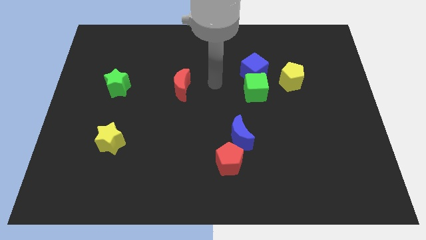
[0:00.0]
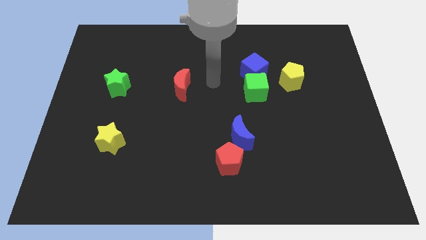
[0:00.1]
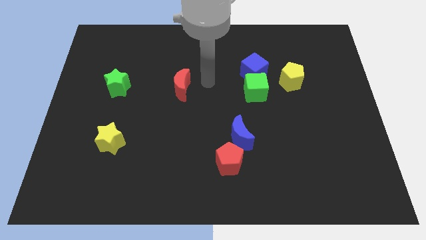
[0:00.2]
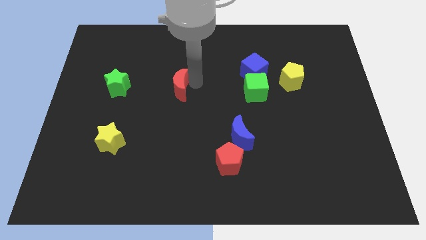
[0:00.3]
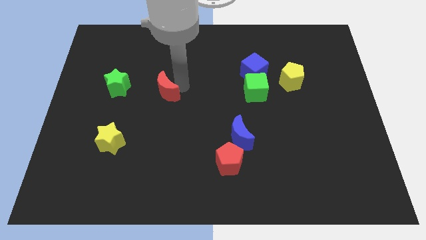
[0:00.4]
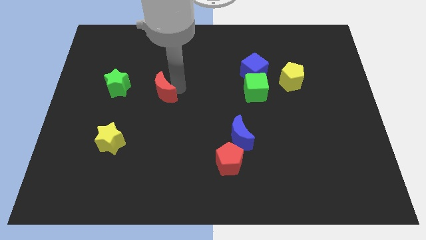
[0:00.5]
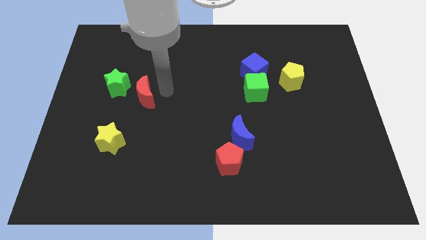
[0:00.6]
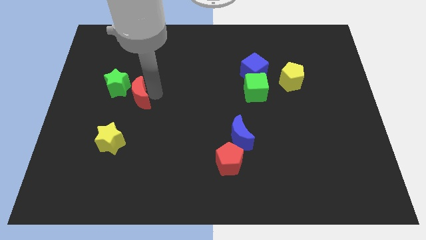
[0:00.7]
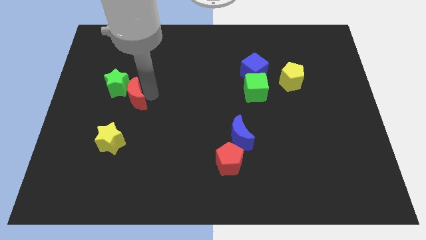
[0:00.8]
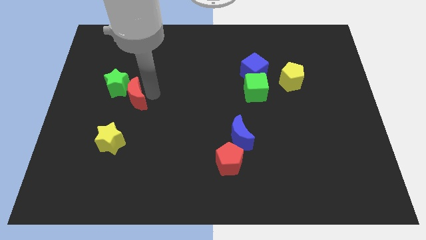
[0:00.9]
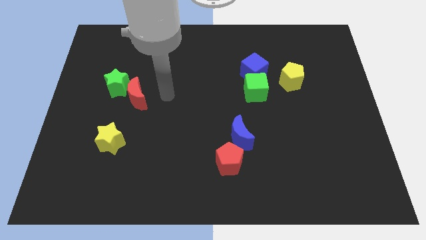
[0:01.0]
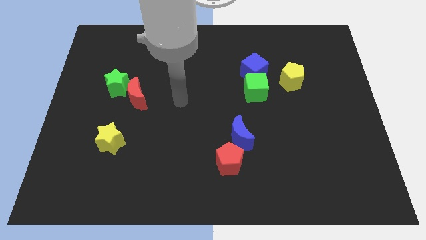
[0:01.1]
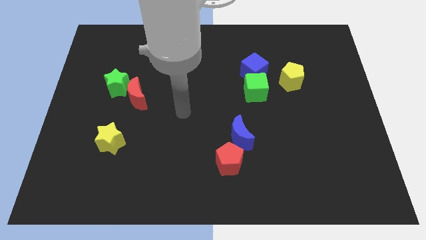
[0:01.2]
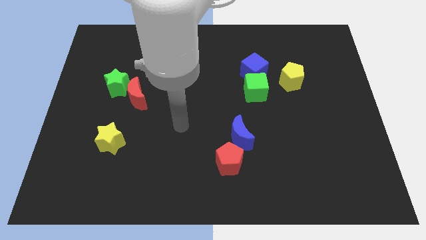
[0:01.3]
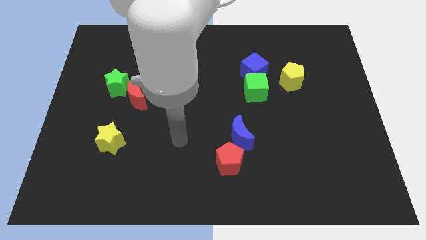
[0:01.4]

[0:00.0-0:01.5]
push the red crescent diagonally to the to the bottom right side of the green star

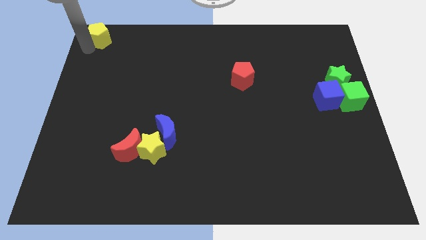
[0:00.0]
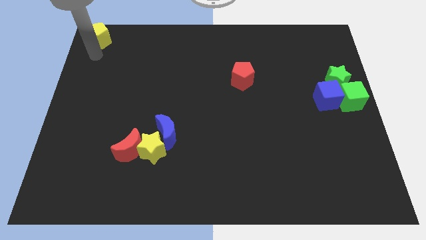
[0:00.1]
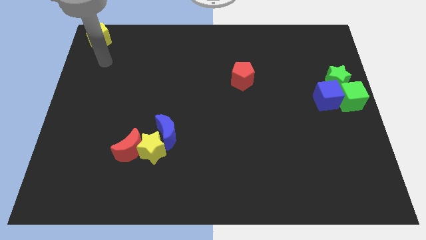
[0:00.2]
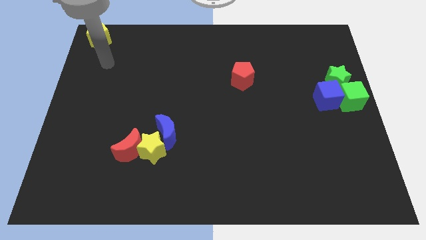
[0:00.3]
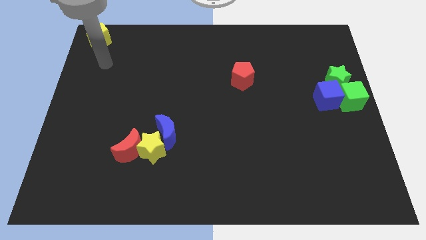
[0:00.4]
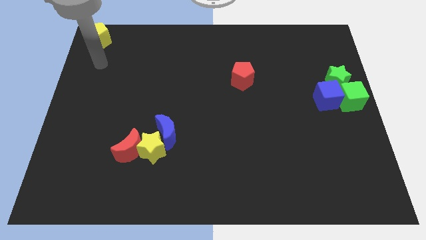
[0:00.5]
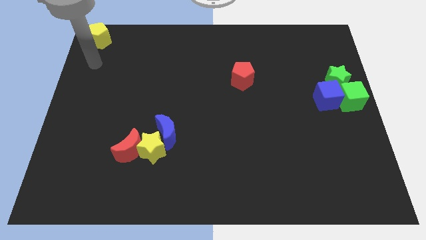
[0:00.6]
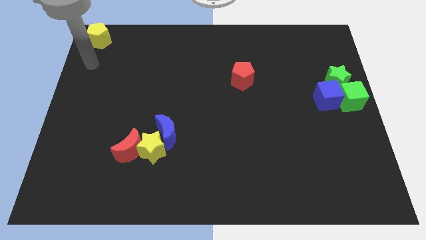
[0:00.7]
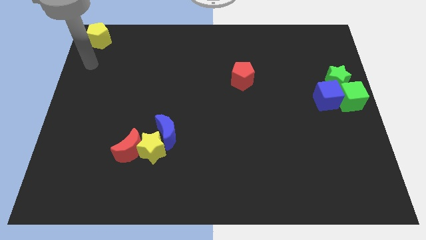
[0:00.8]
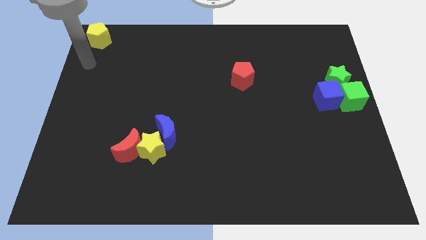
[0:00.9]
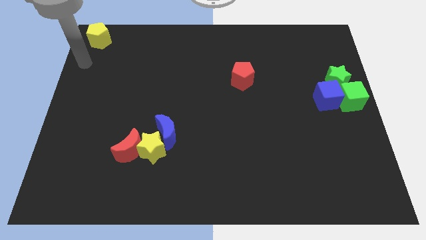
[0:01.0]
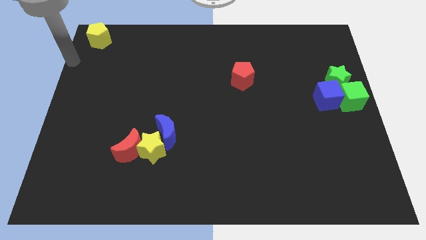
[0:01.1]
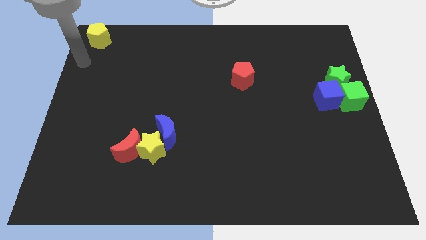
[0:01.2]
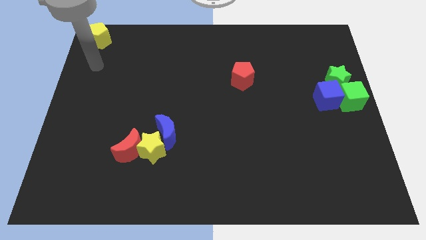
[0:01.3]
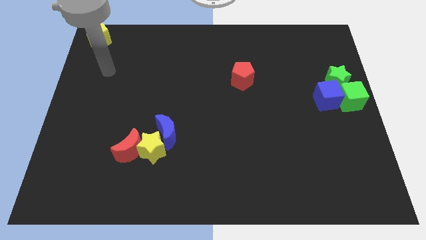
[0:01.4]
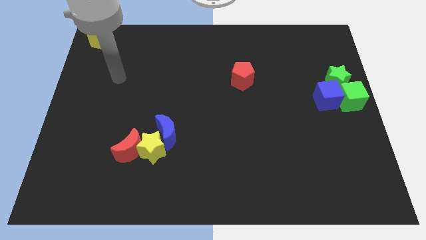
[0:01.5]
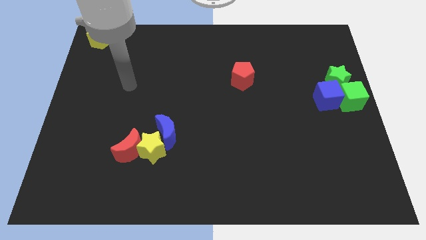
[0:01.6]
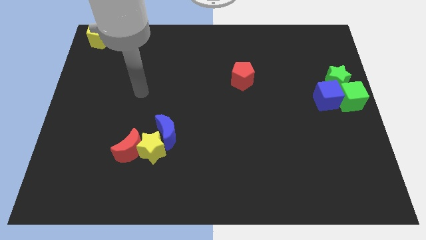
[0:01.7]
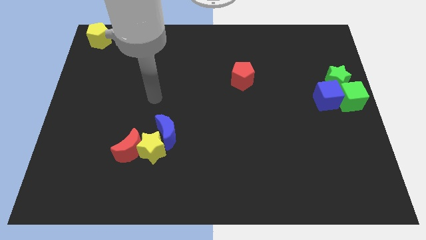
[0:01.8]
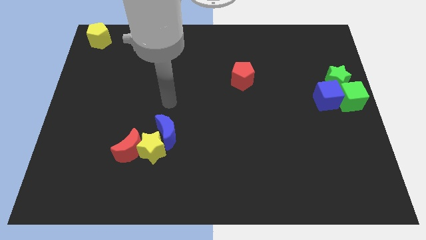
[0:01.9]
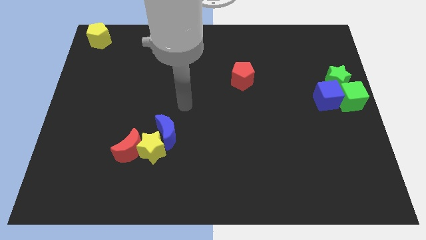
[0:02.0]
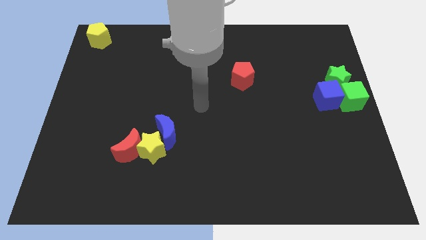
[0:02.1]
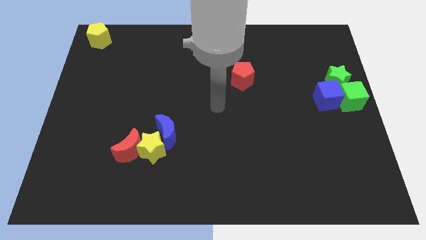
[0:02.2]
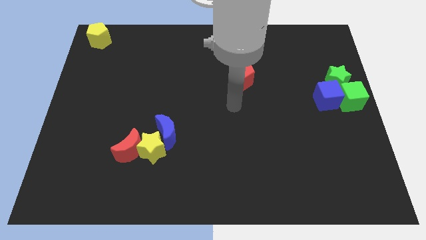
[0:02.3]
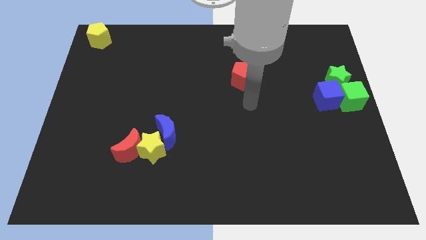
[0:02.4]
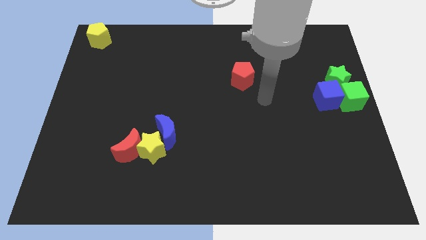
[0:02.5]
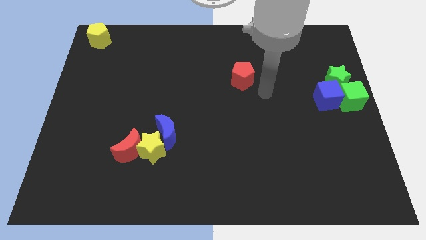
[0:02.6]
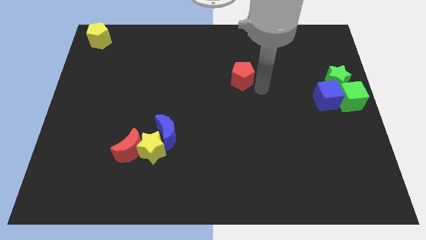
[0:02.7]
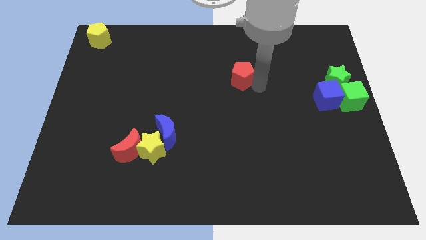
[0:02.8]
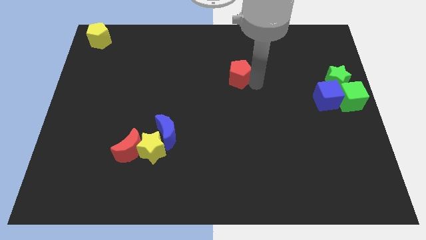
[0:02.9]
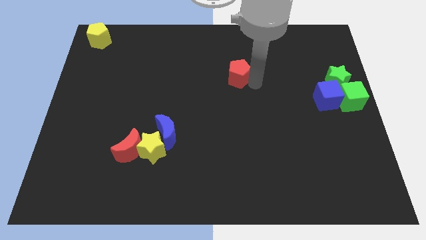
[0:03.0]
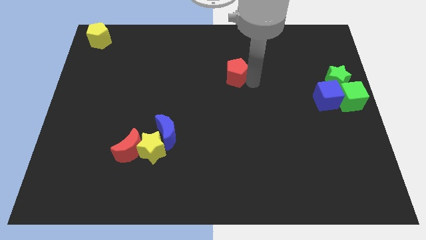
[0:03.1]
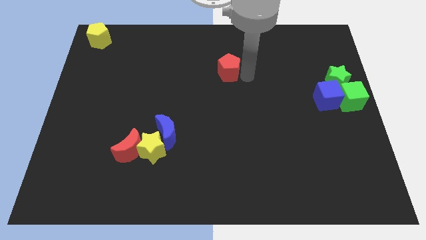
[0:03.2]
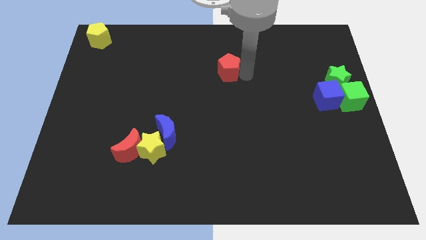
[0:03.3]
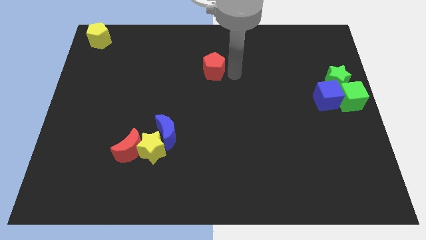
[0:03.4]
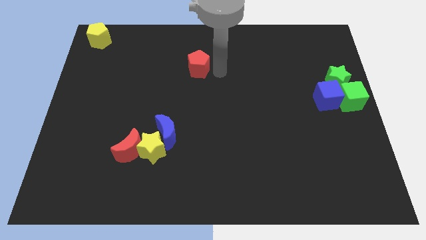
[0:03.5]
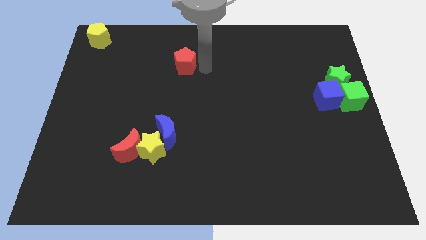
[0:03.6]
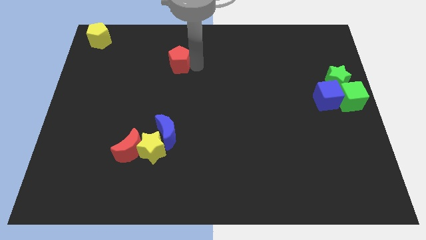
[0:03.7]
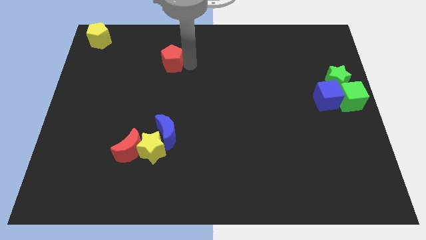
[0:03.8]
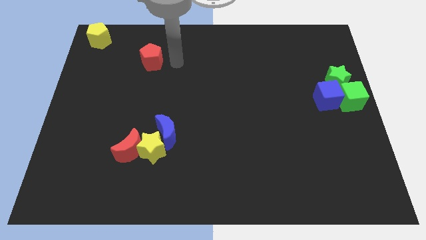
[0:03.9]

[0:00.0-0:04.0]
push the red pentagon to the top of the blue crescent

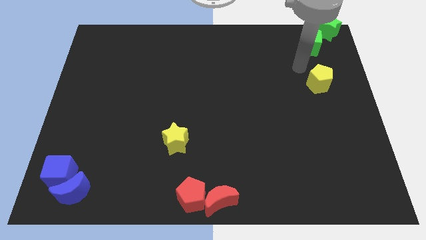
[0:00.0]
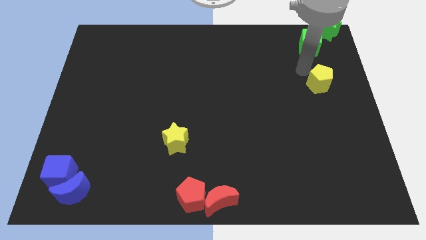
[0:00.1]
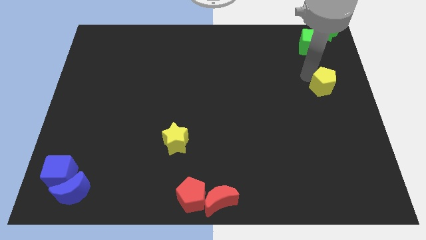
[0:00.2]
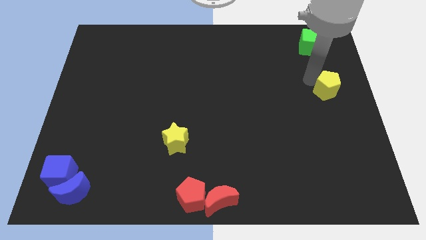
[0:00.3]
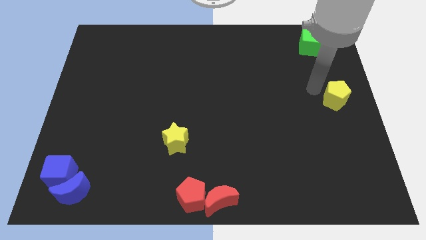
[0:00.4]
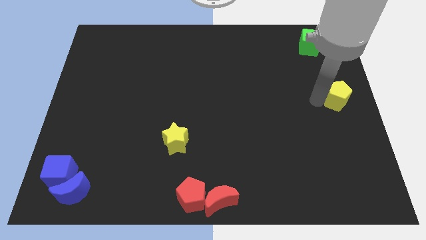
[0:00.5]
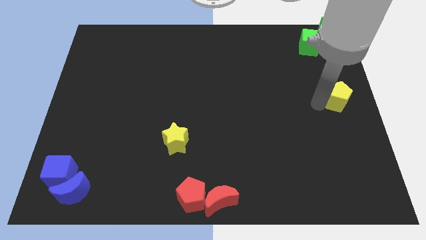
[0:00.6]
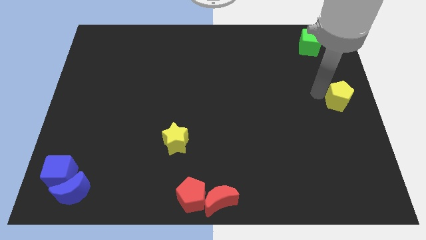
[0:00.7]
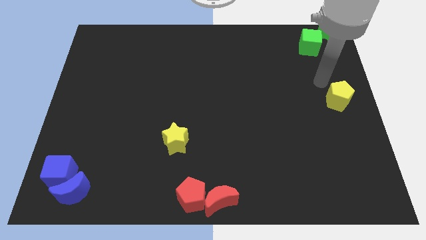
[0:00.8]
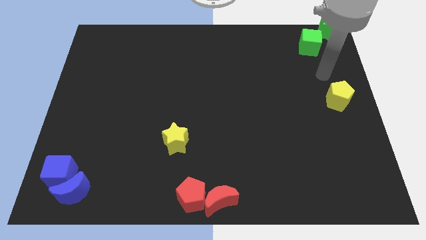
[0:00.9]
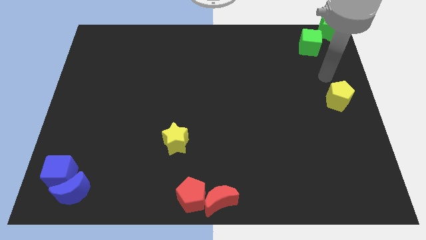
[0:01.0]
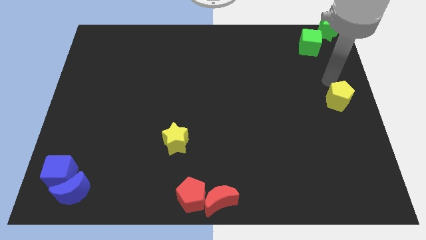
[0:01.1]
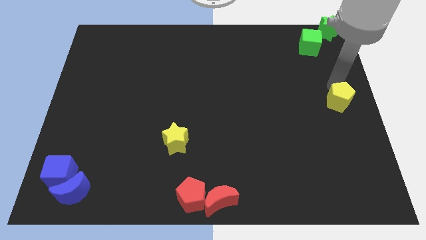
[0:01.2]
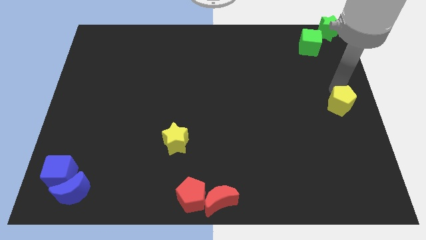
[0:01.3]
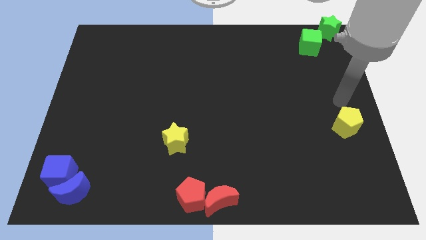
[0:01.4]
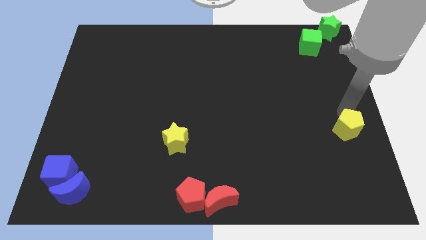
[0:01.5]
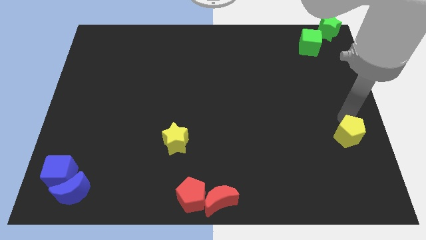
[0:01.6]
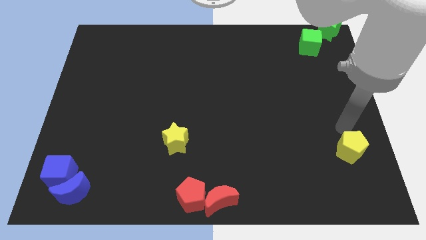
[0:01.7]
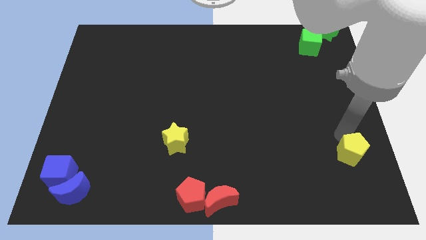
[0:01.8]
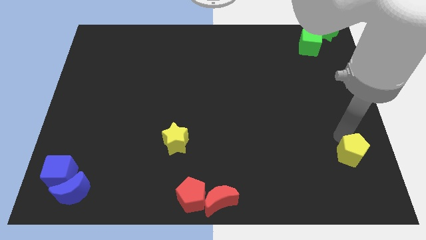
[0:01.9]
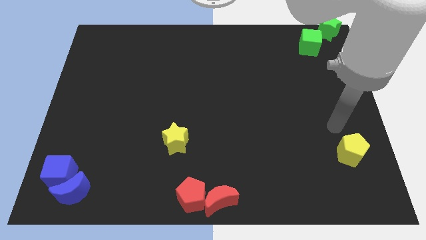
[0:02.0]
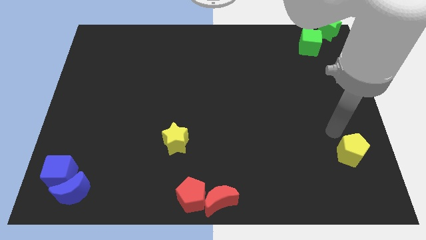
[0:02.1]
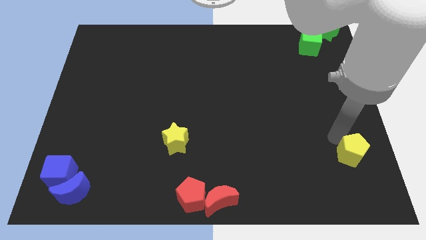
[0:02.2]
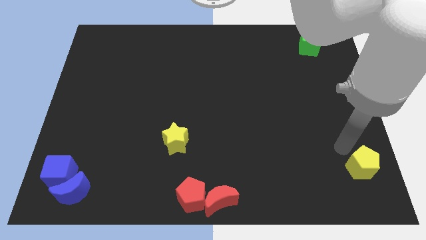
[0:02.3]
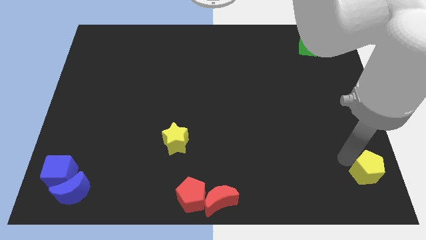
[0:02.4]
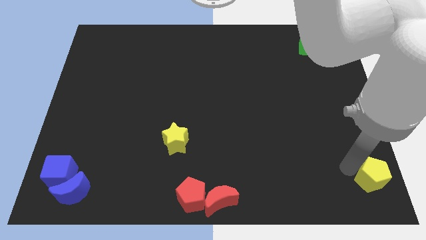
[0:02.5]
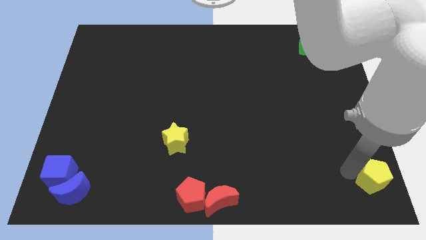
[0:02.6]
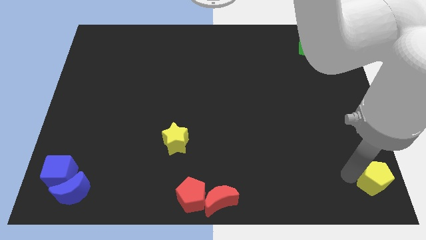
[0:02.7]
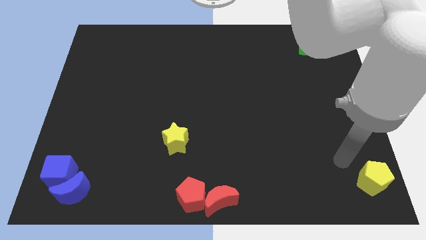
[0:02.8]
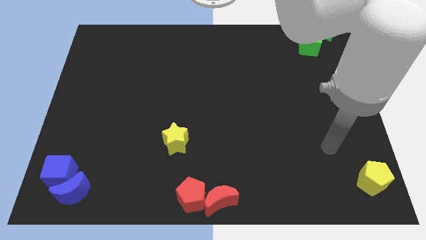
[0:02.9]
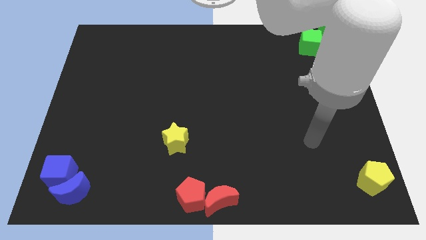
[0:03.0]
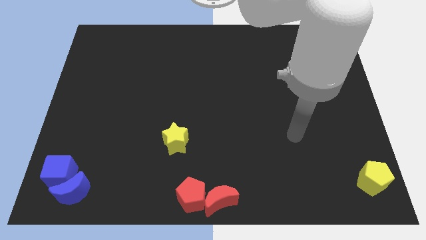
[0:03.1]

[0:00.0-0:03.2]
slide the yellow pentagon towards the bottom right corner

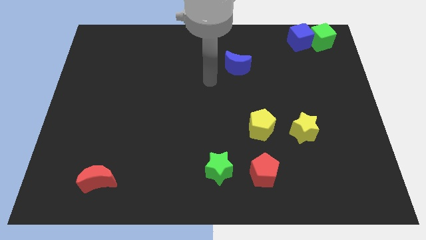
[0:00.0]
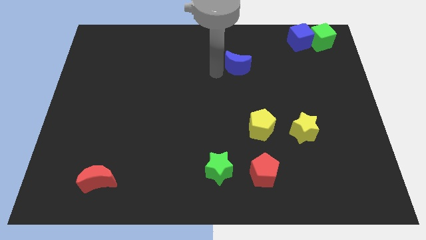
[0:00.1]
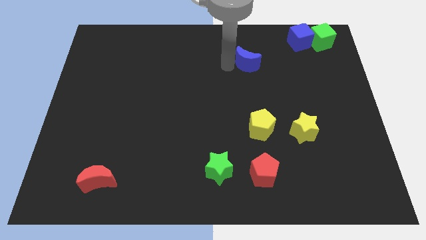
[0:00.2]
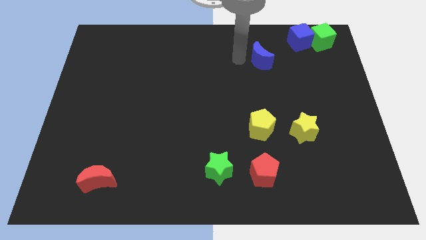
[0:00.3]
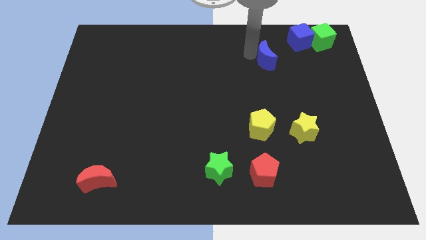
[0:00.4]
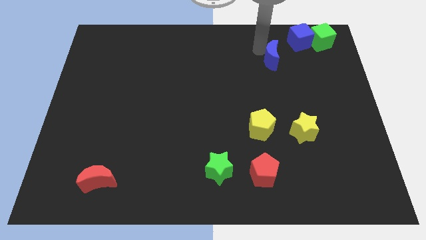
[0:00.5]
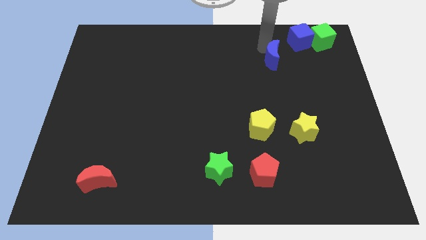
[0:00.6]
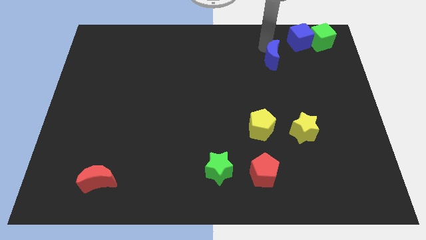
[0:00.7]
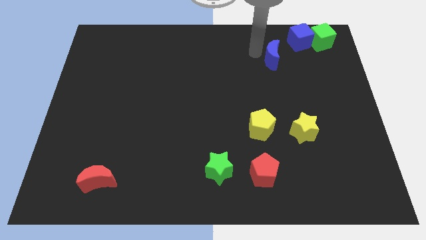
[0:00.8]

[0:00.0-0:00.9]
move the blue crescent towards the top right of board
